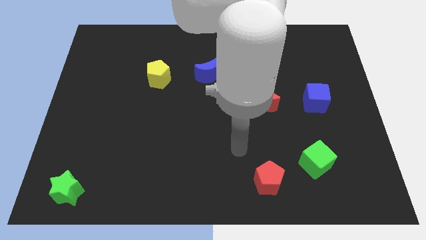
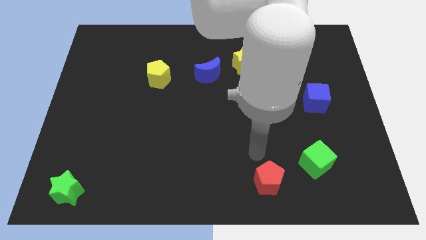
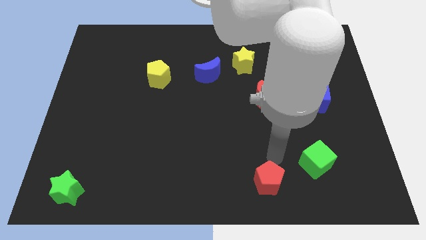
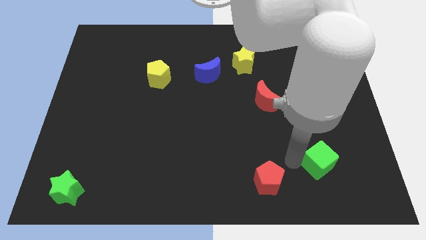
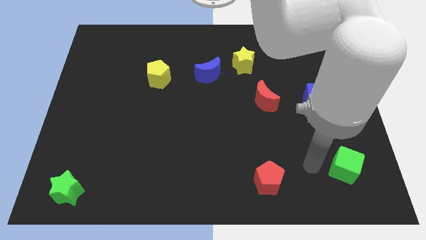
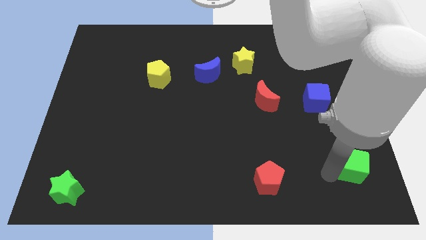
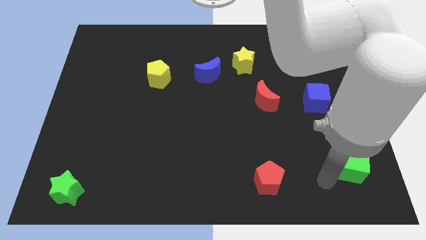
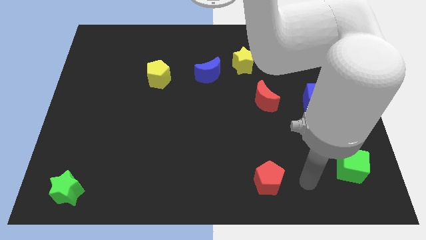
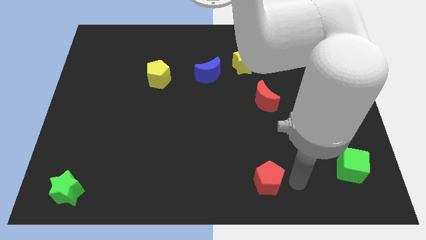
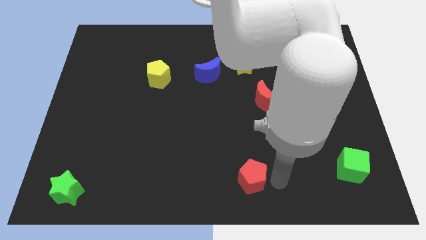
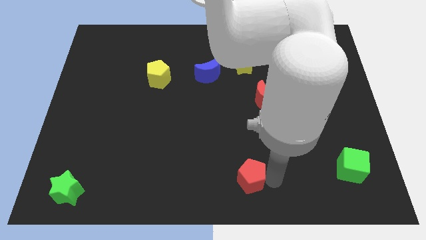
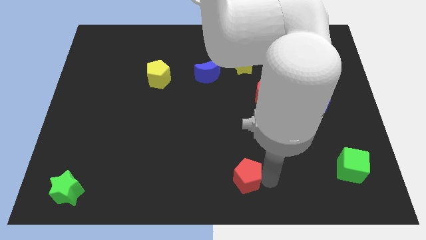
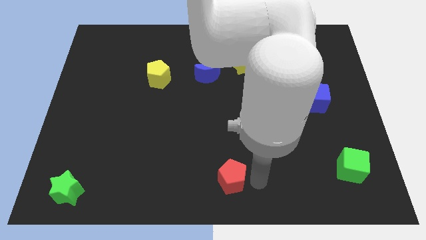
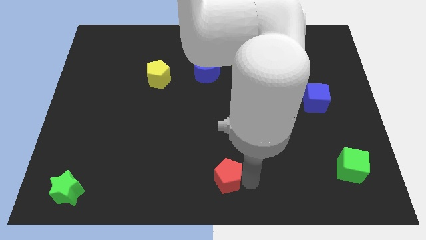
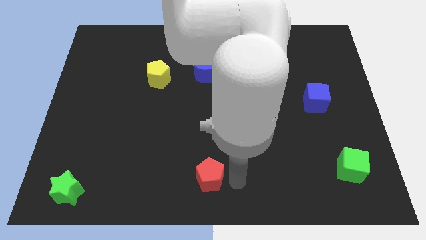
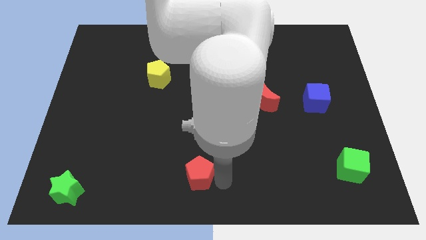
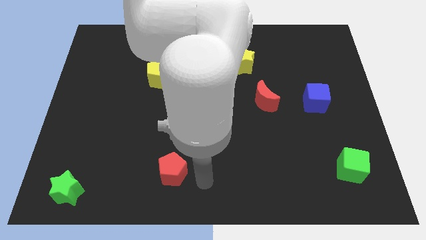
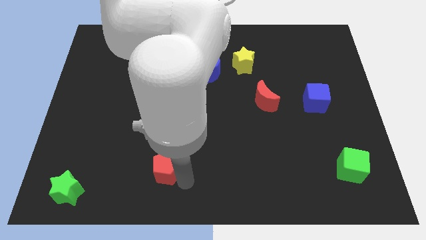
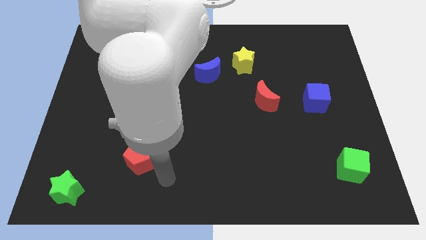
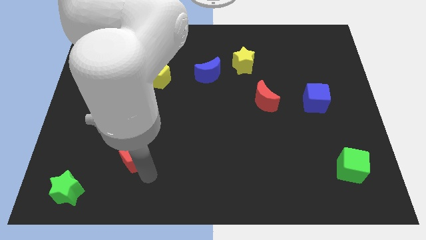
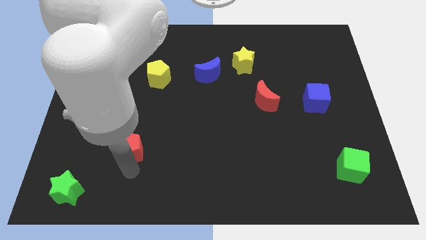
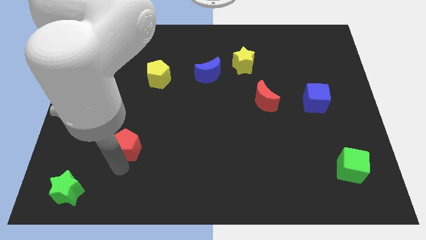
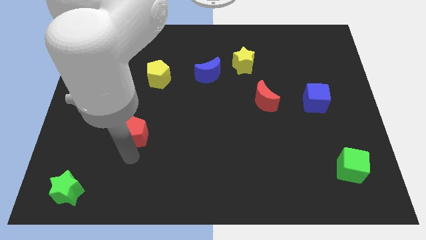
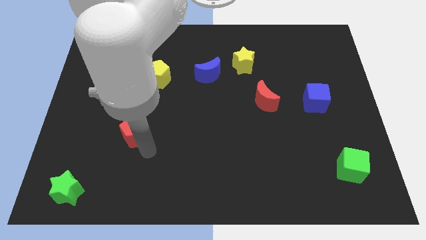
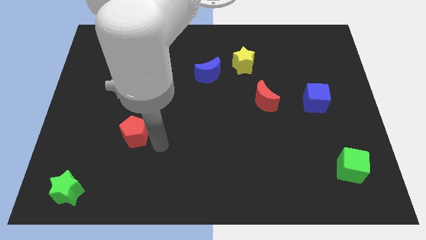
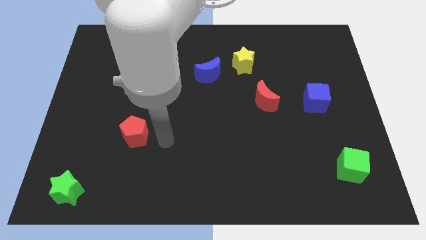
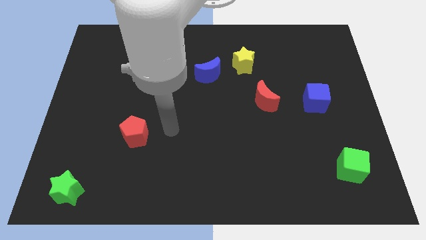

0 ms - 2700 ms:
place the red pentagon diagonally top right to green star

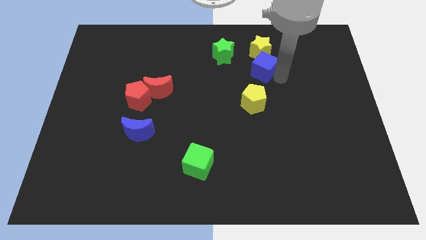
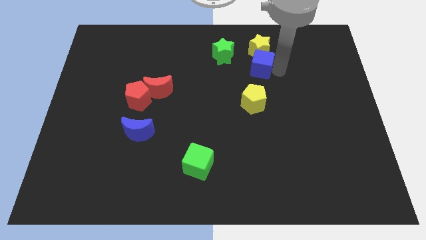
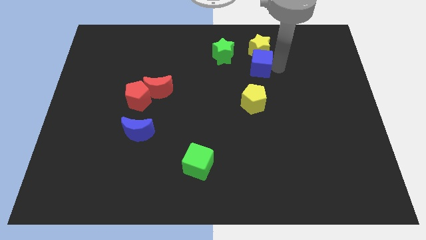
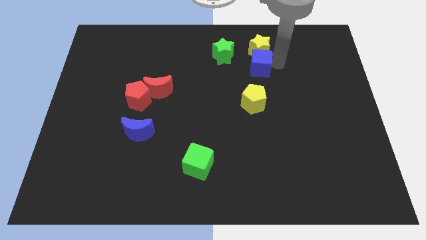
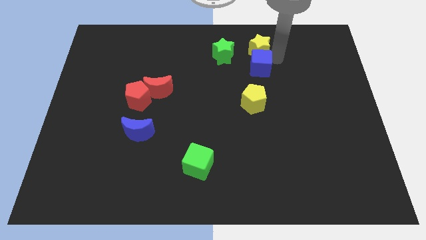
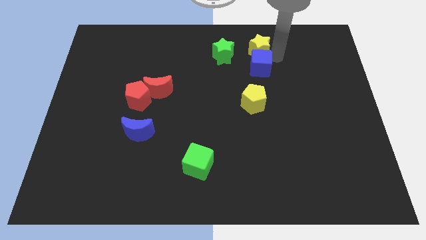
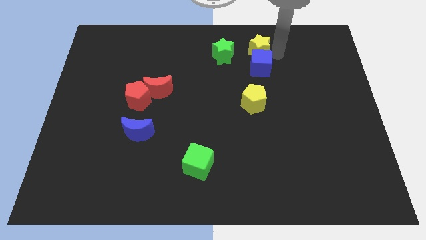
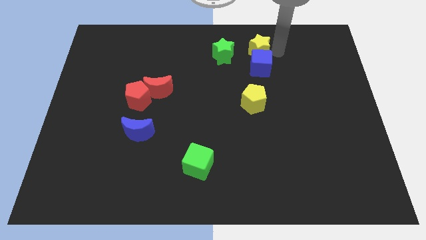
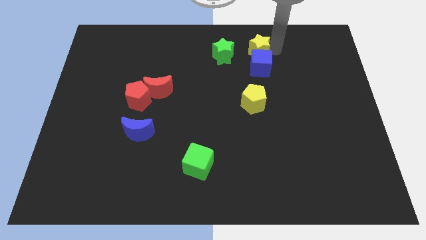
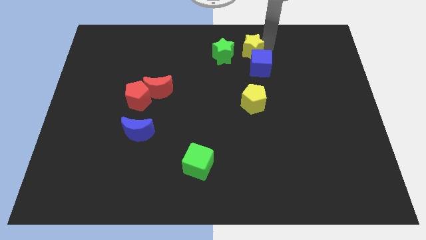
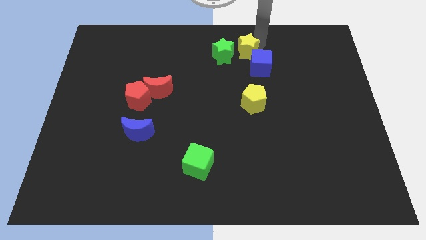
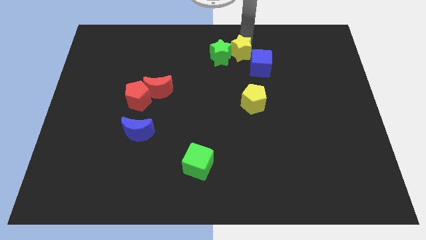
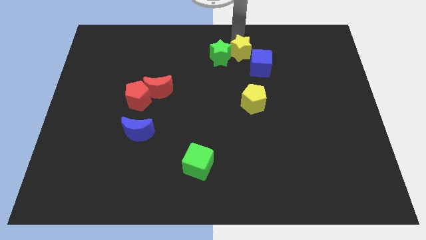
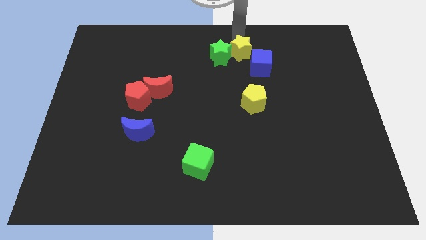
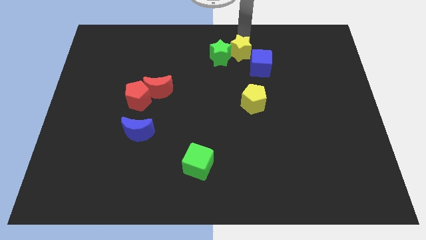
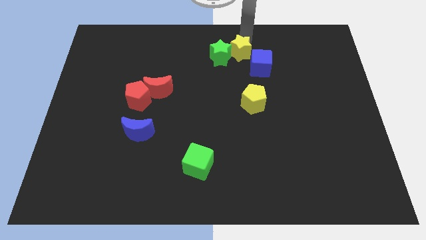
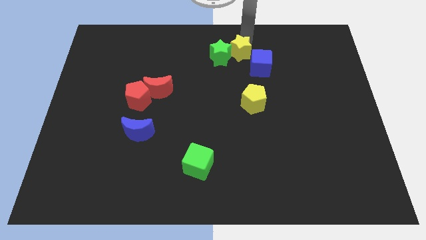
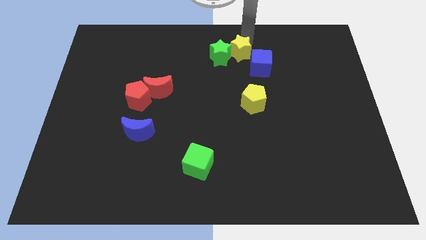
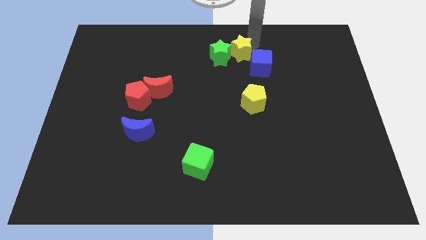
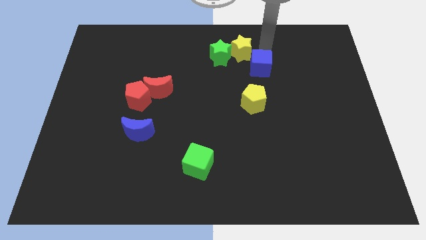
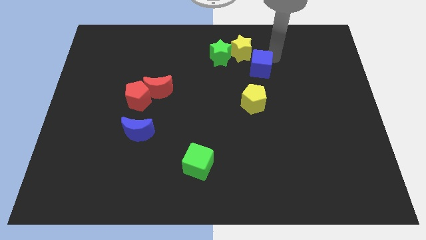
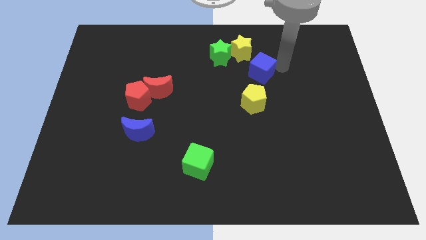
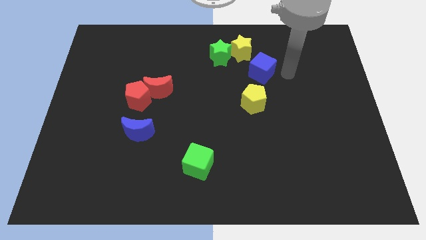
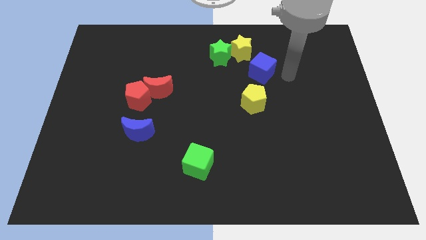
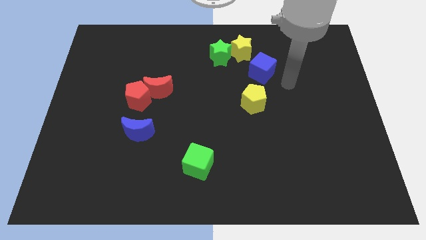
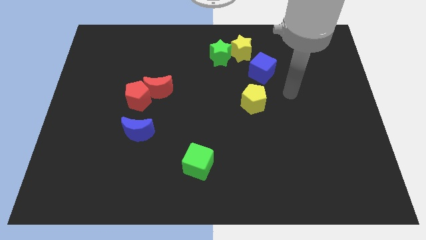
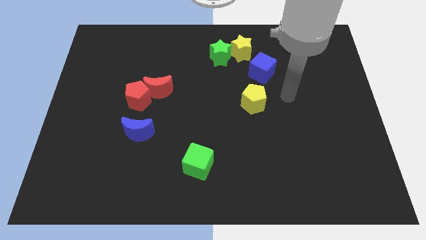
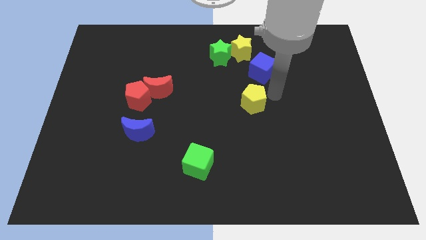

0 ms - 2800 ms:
move the yellow star right to the green star

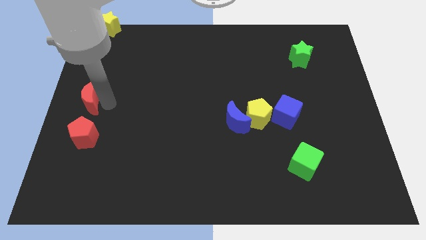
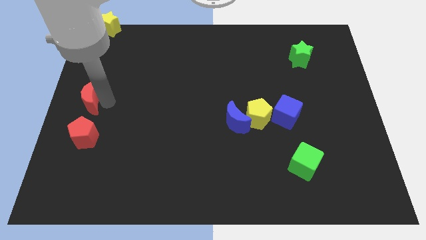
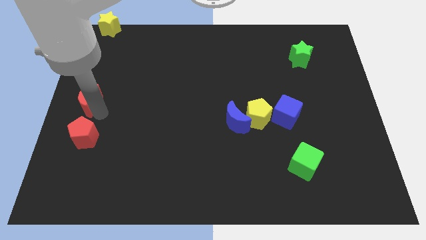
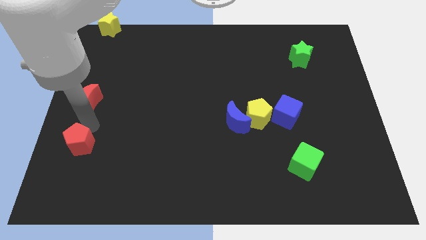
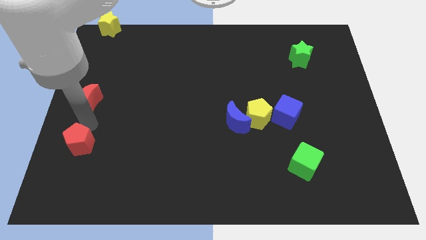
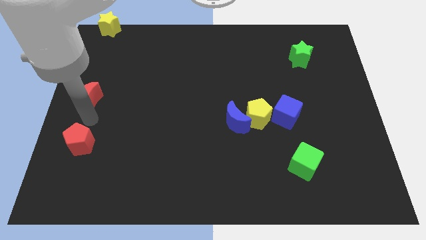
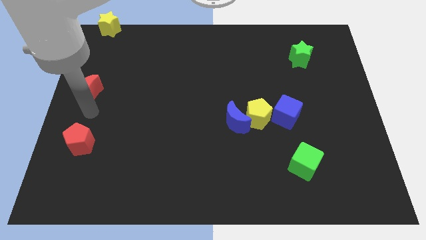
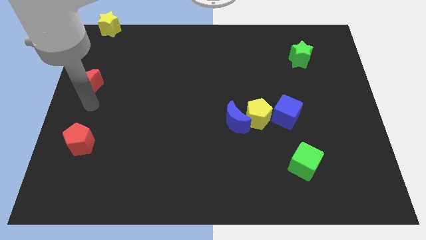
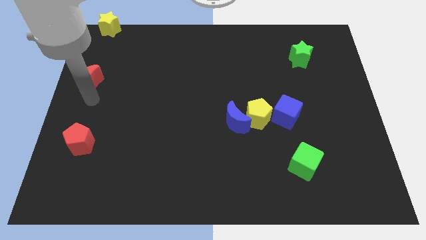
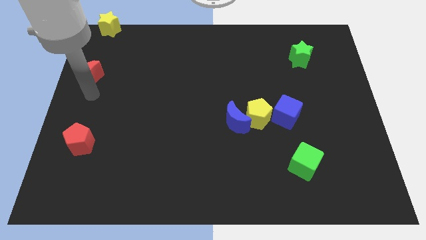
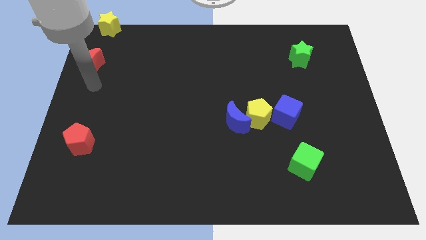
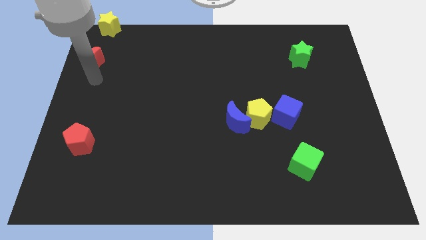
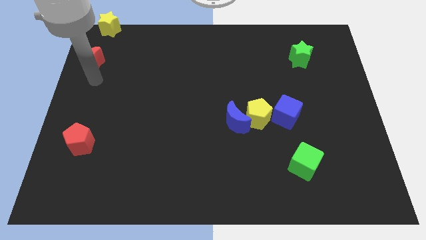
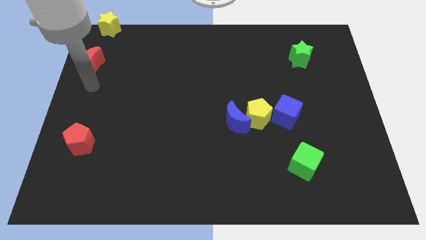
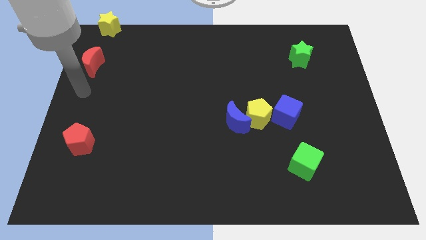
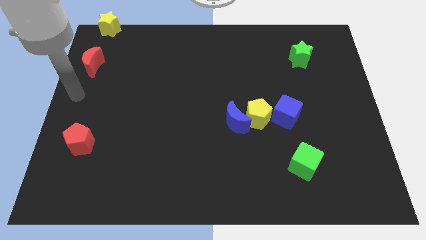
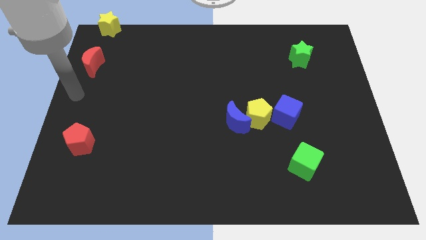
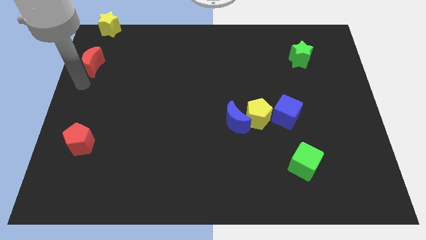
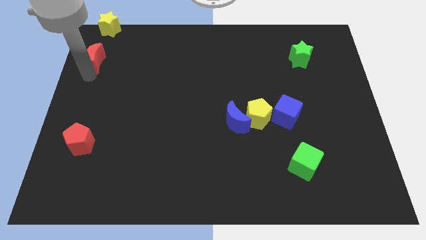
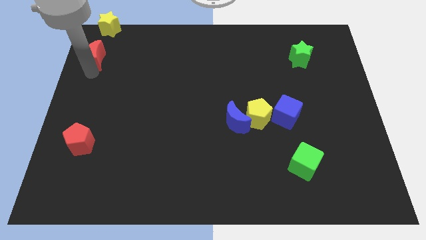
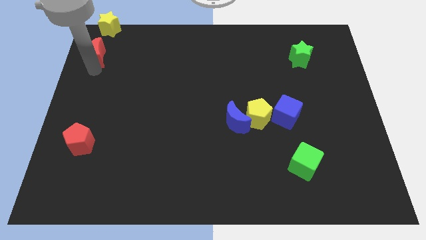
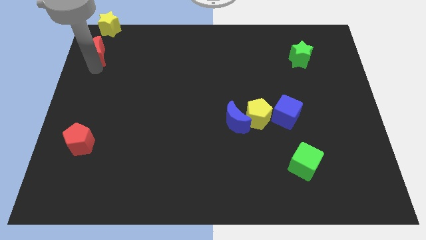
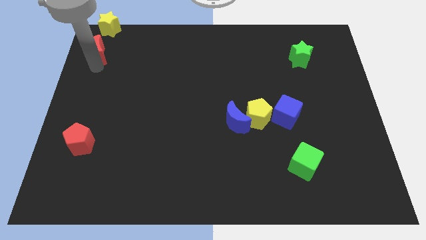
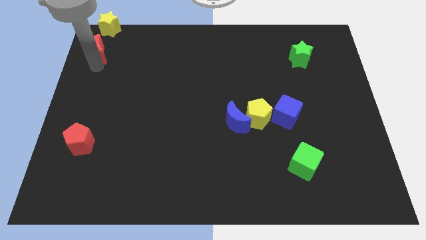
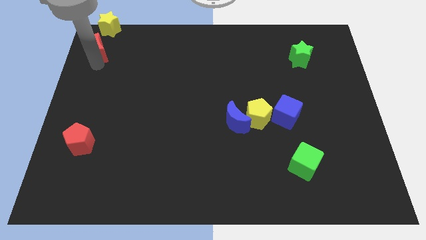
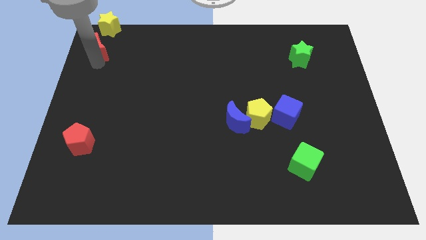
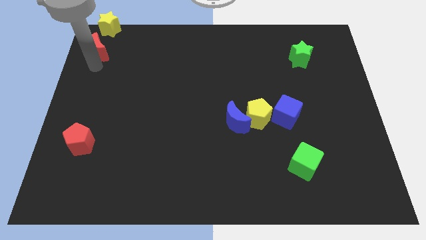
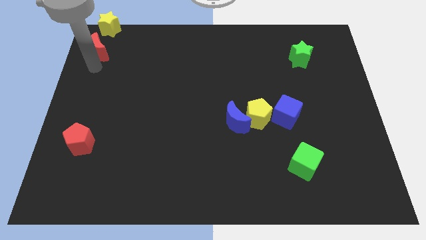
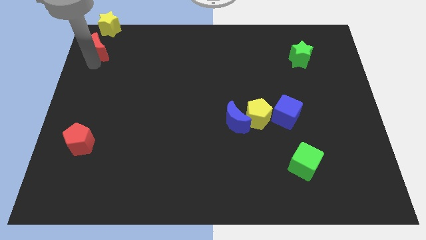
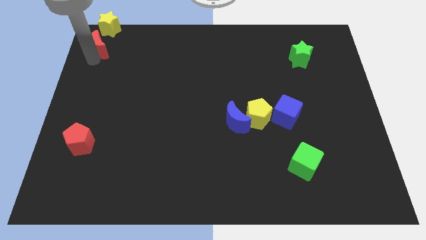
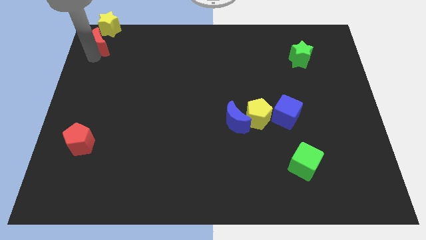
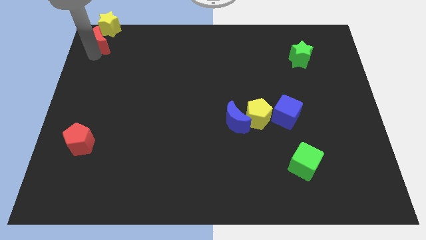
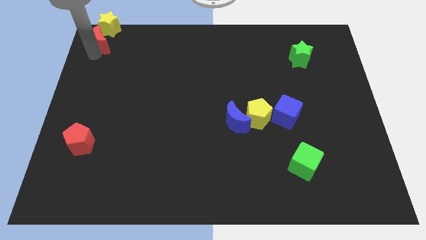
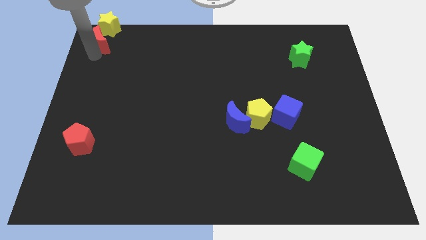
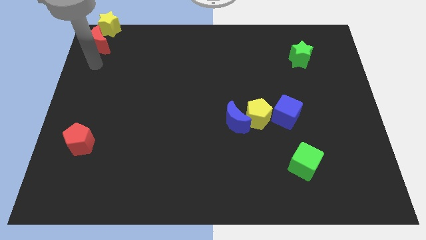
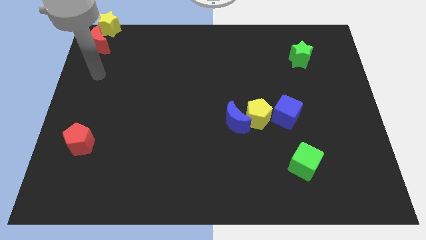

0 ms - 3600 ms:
push the red crescent close to the yellow star
